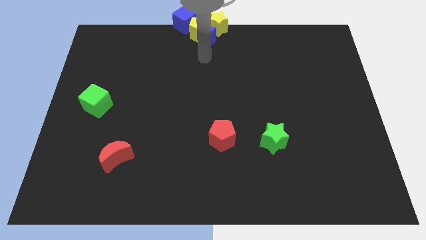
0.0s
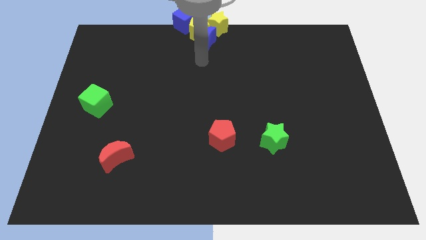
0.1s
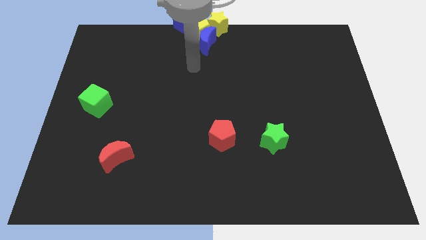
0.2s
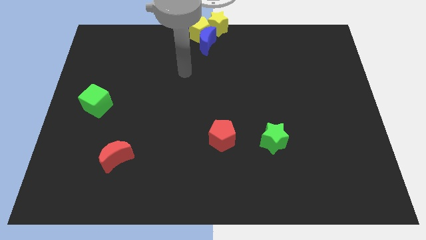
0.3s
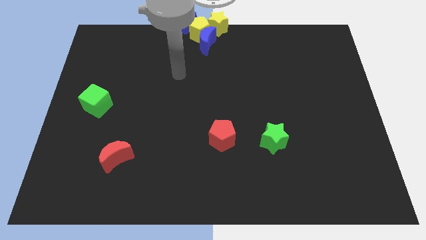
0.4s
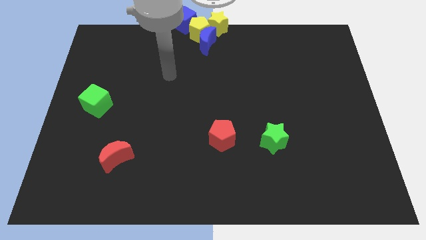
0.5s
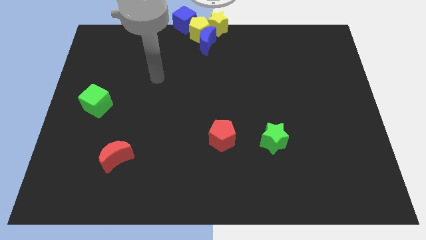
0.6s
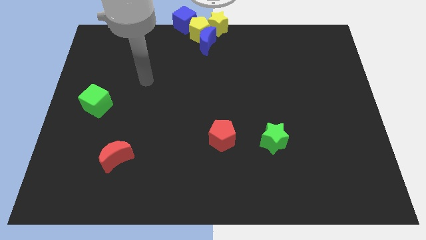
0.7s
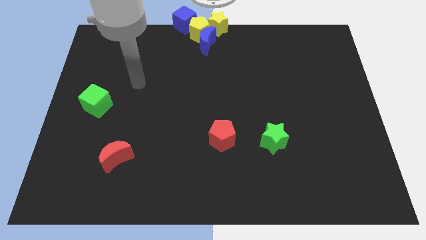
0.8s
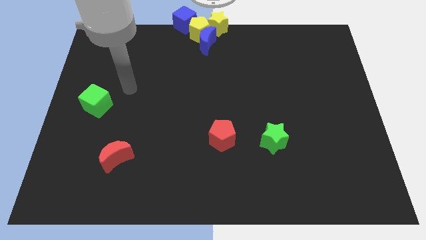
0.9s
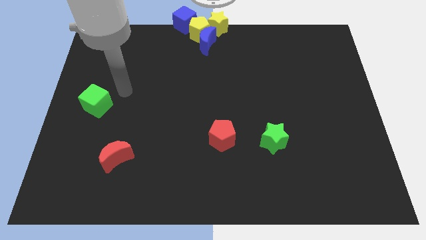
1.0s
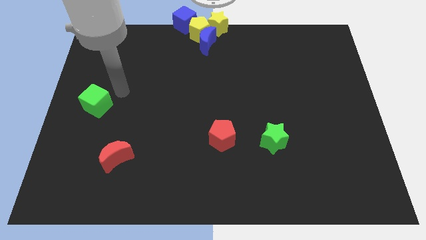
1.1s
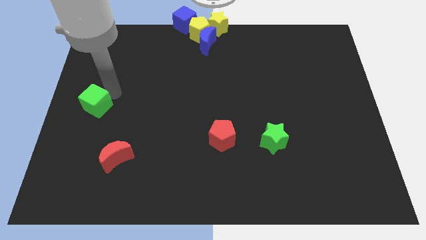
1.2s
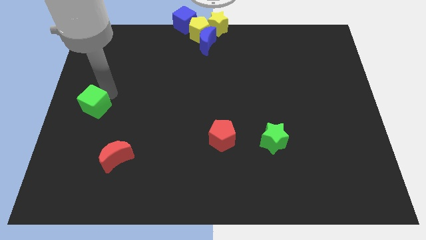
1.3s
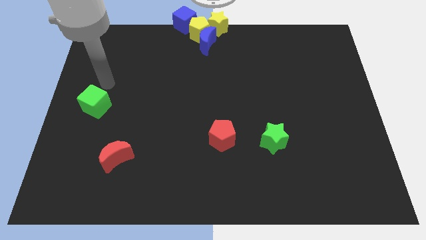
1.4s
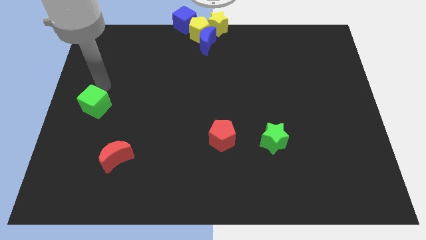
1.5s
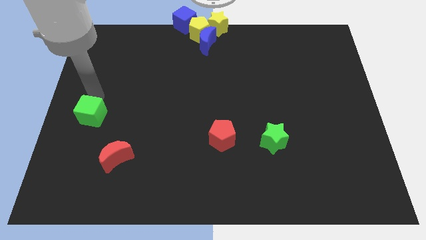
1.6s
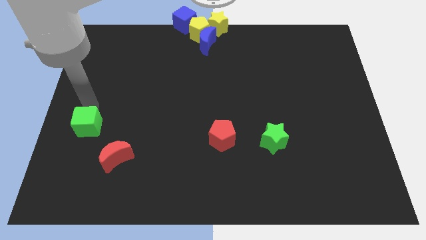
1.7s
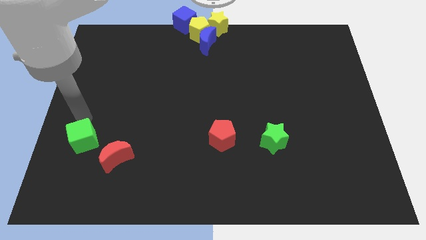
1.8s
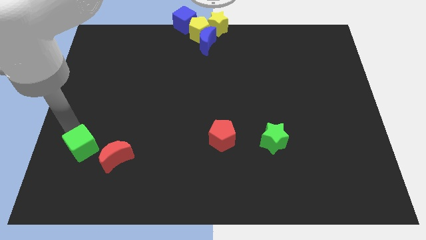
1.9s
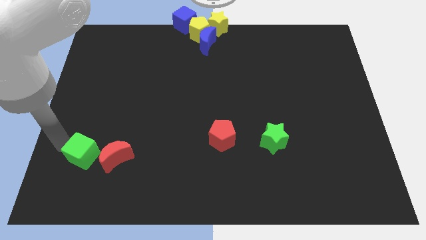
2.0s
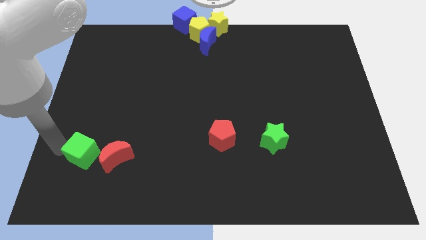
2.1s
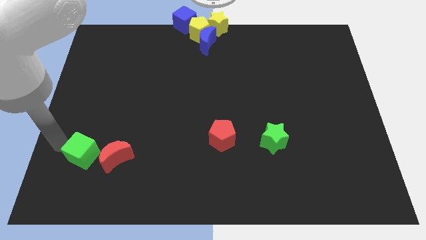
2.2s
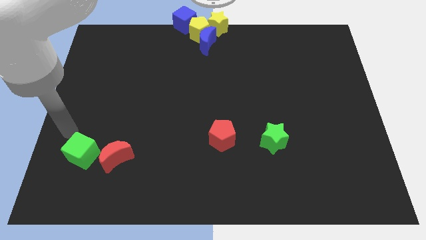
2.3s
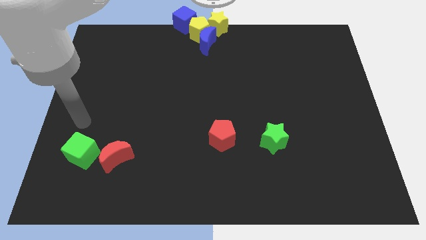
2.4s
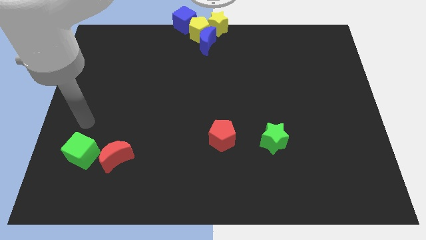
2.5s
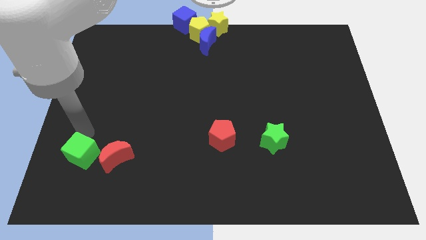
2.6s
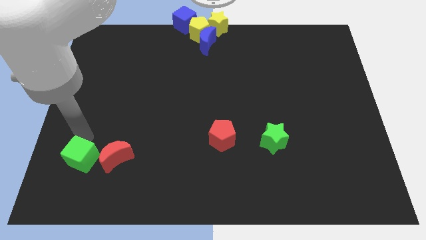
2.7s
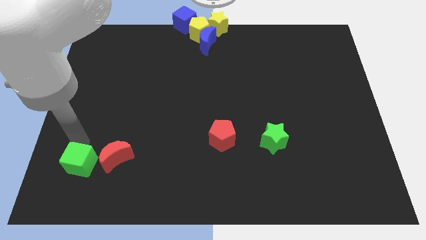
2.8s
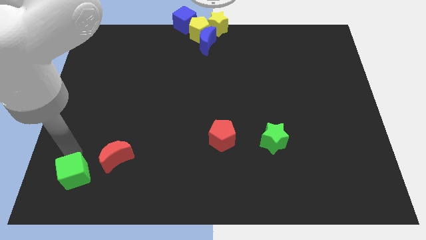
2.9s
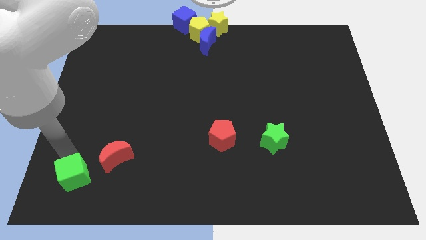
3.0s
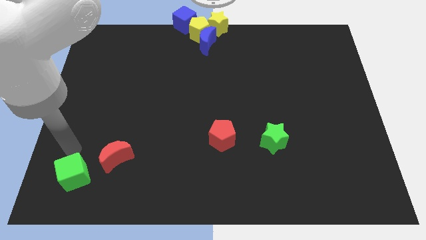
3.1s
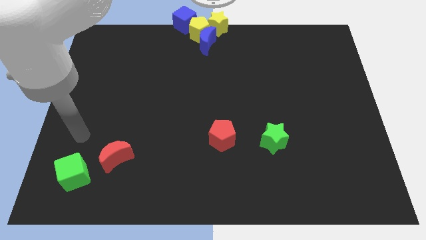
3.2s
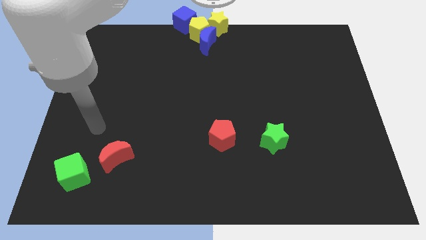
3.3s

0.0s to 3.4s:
move green cube to the left of red crescent

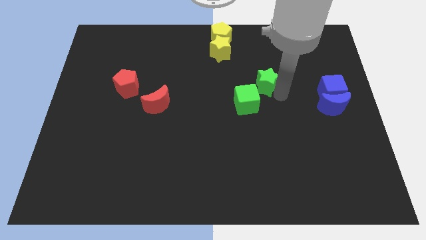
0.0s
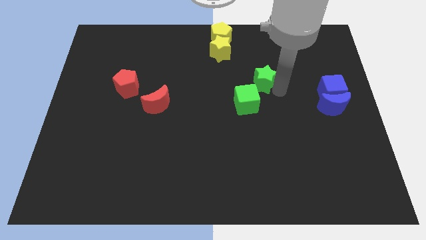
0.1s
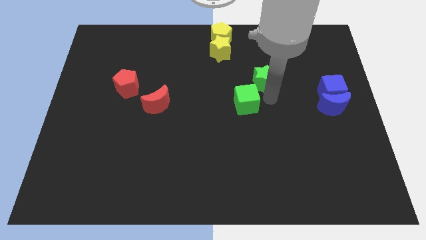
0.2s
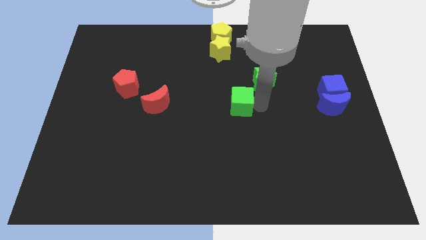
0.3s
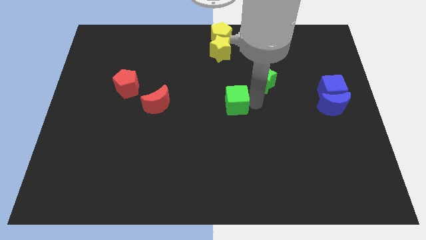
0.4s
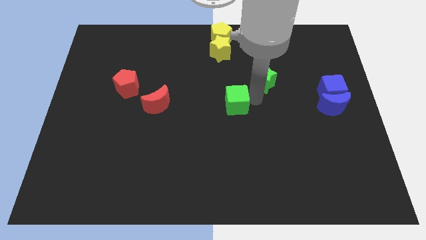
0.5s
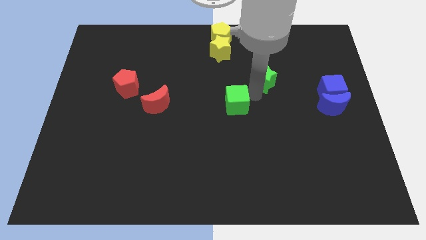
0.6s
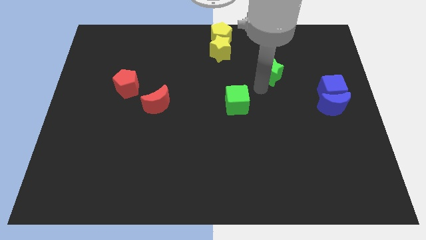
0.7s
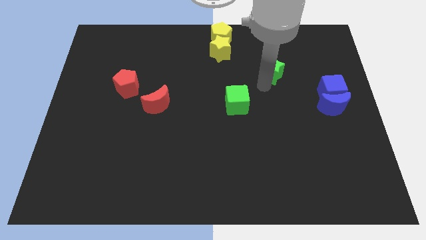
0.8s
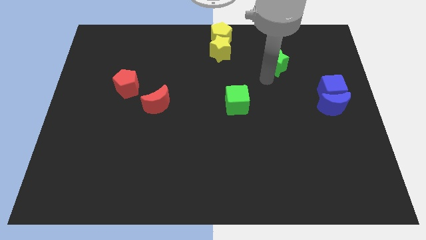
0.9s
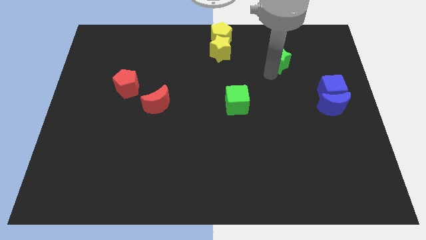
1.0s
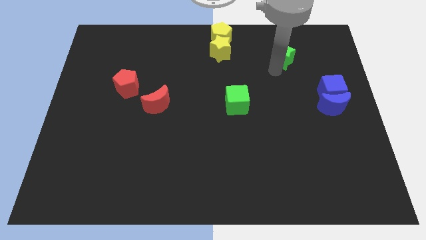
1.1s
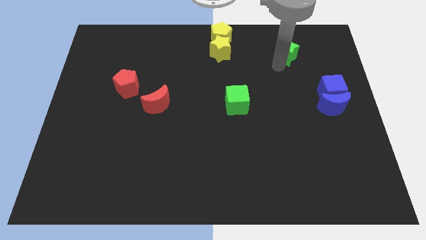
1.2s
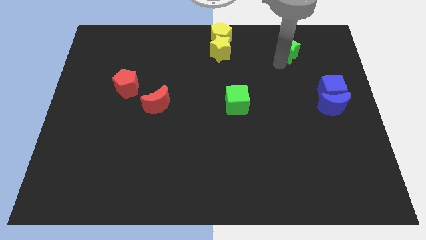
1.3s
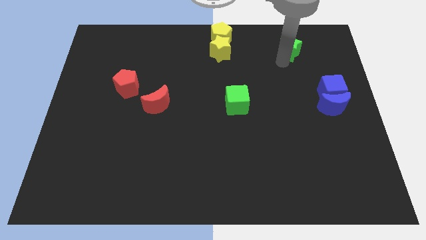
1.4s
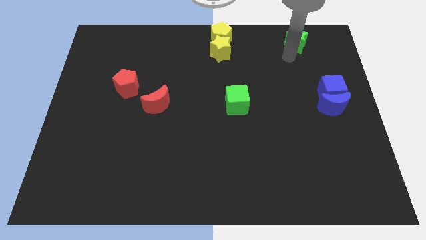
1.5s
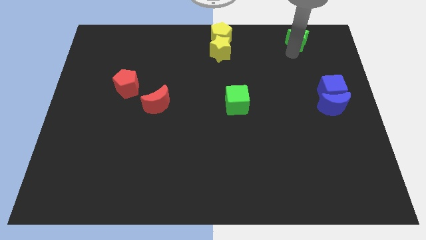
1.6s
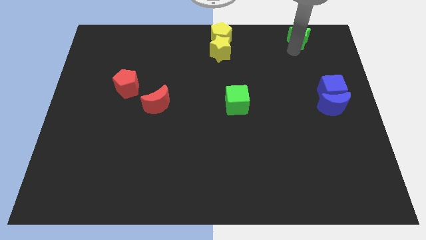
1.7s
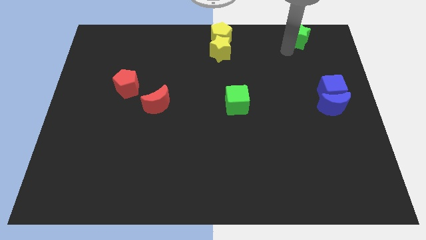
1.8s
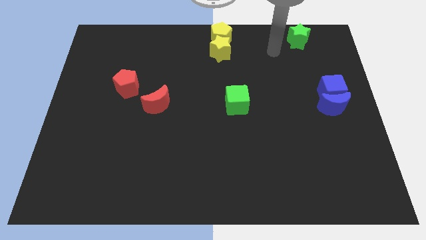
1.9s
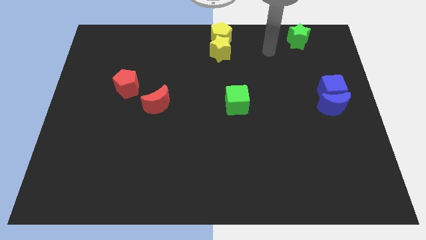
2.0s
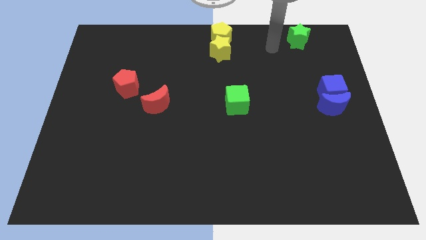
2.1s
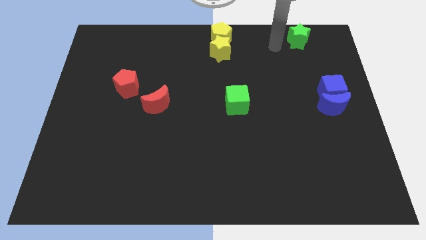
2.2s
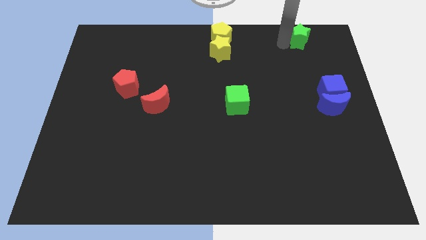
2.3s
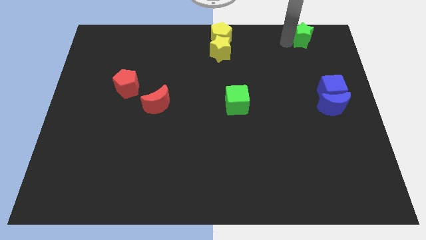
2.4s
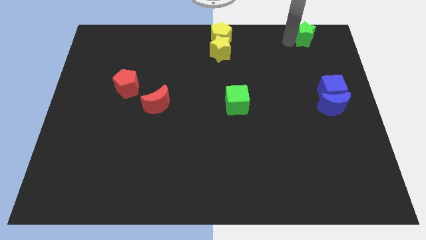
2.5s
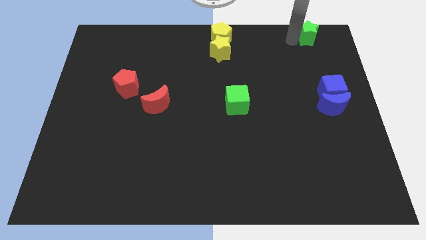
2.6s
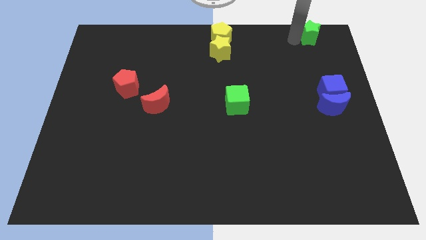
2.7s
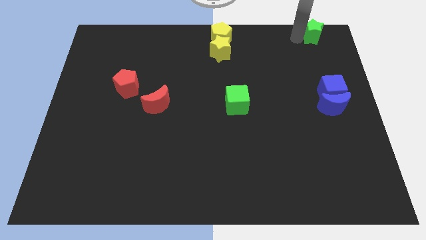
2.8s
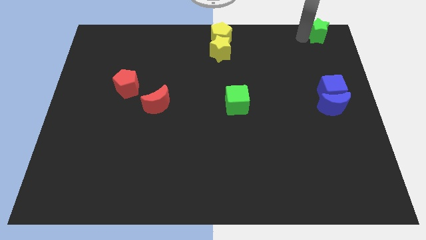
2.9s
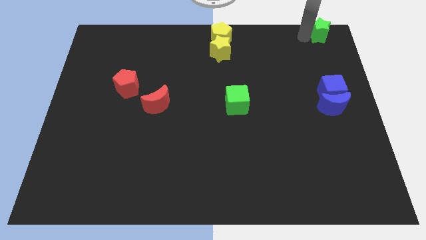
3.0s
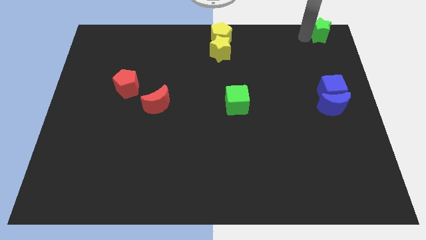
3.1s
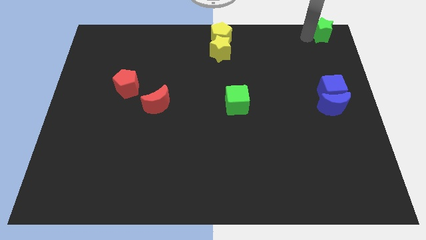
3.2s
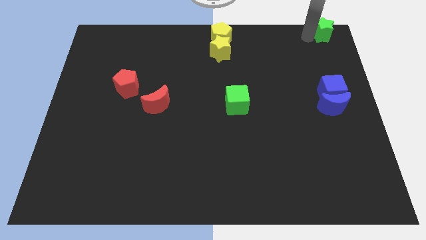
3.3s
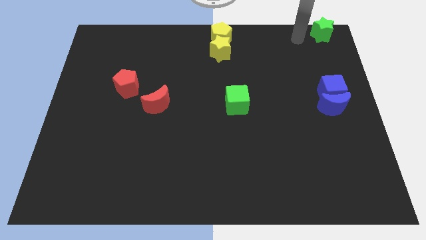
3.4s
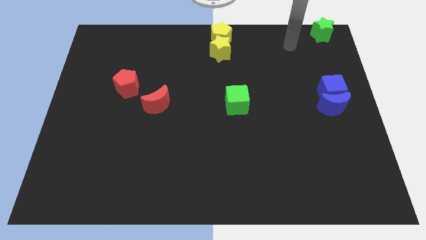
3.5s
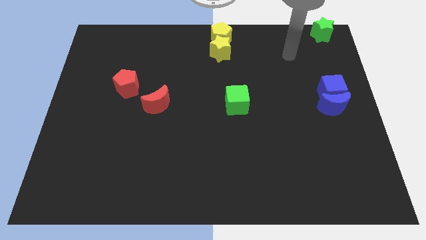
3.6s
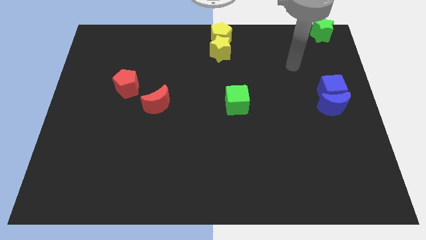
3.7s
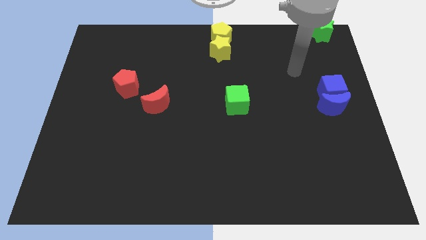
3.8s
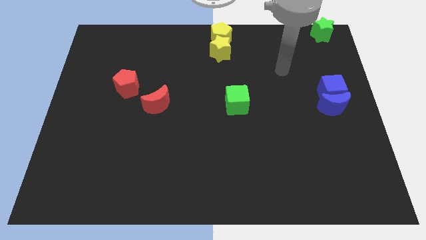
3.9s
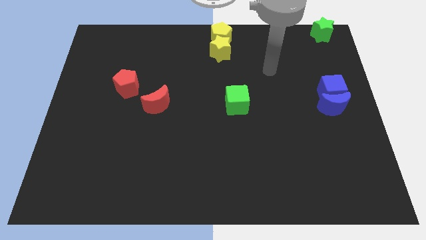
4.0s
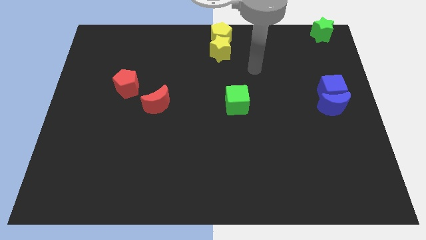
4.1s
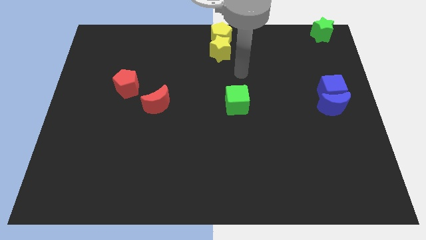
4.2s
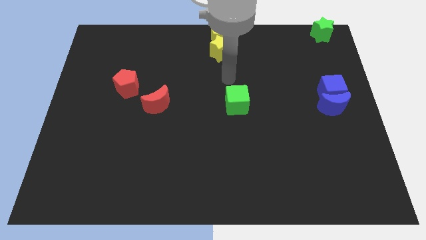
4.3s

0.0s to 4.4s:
move the green star to the top right corner of the board

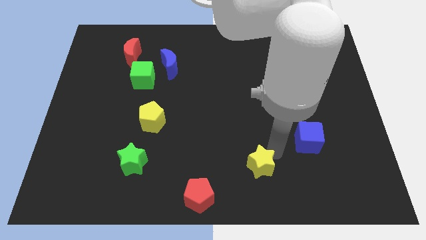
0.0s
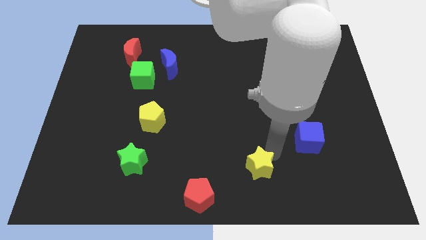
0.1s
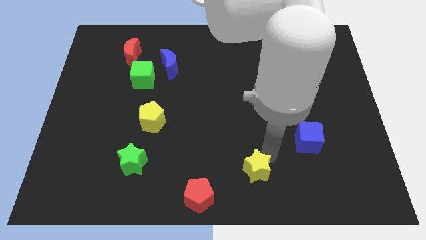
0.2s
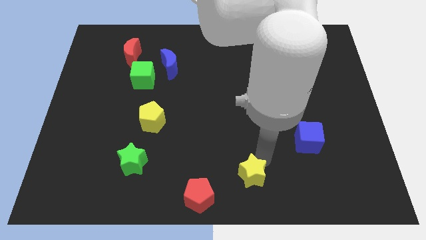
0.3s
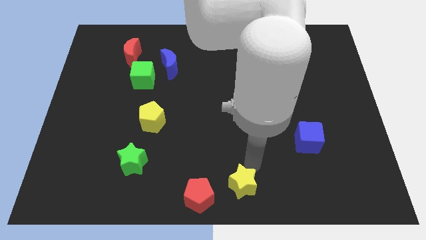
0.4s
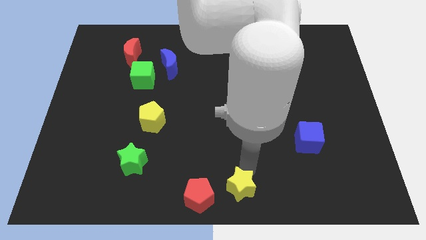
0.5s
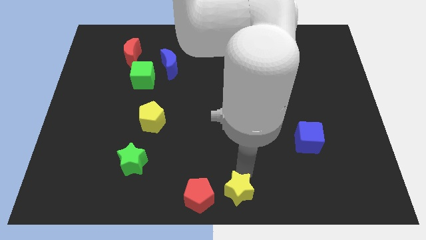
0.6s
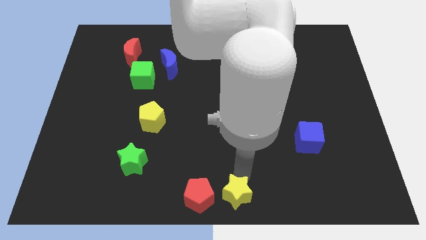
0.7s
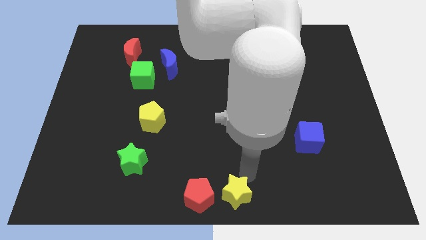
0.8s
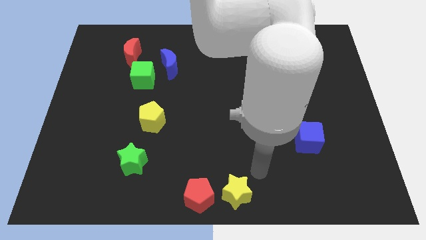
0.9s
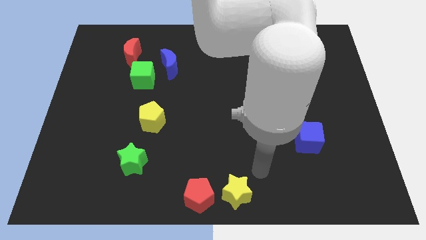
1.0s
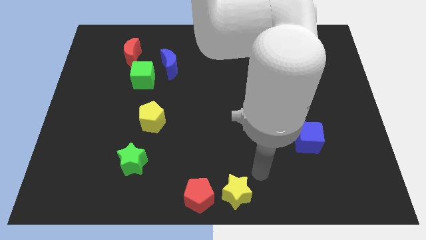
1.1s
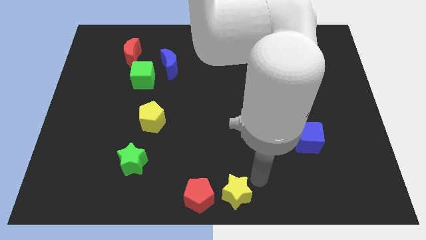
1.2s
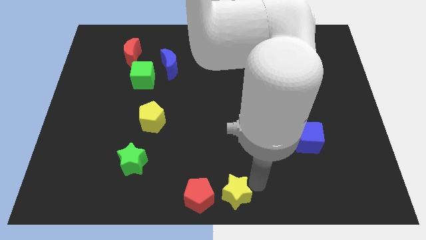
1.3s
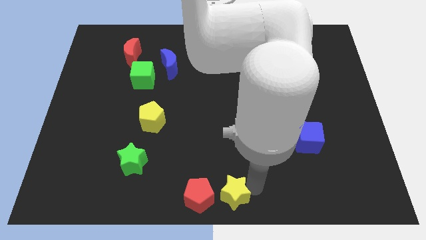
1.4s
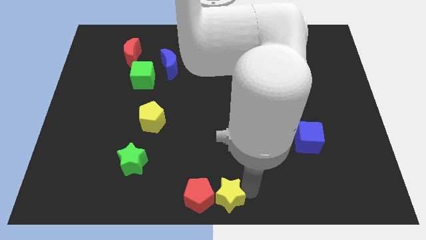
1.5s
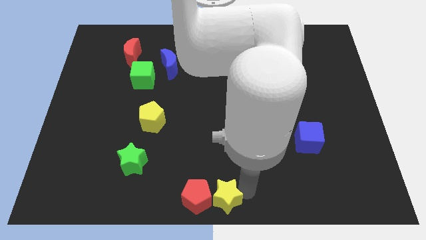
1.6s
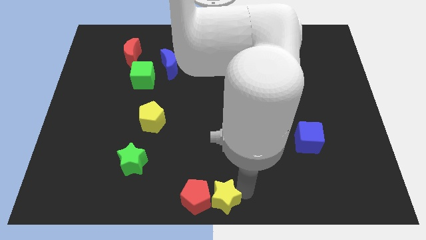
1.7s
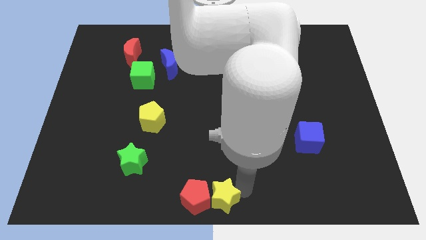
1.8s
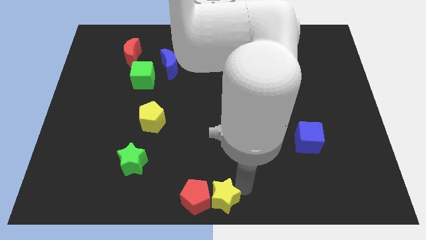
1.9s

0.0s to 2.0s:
push the yellow star in to the red pentagon
